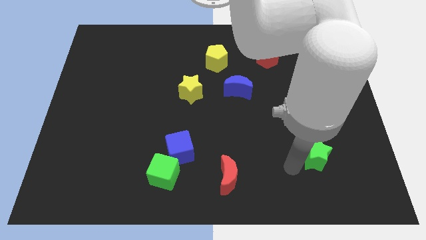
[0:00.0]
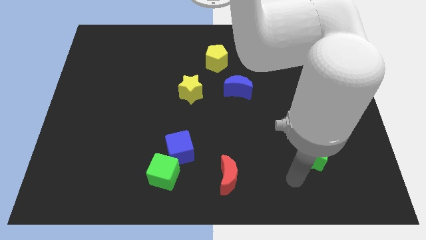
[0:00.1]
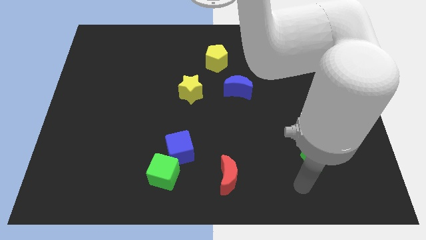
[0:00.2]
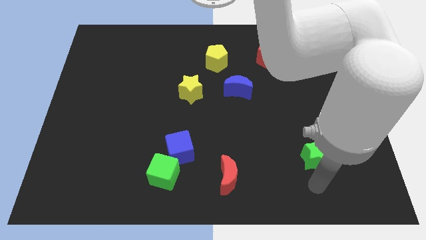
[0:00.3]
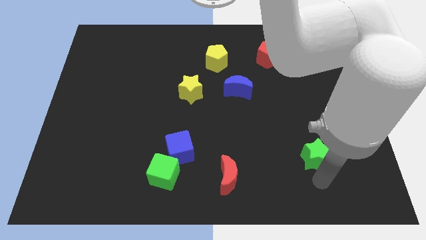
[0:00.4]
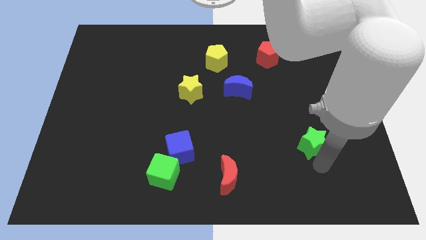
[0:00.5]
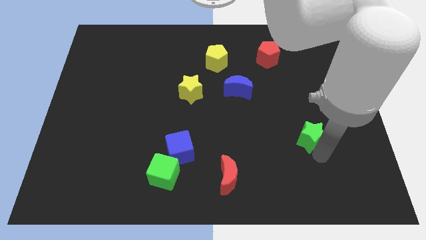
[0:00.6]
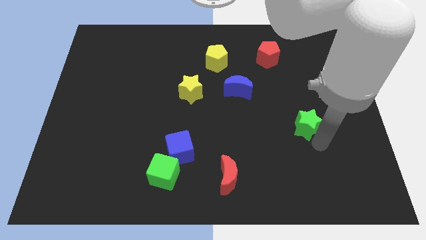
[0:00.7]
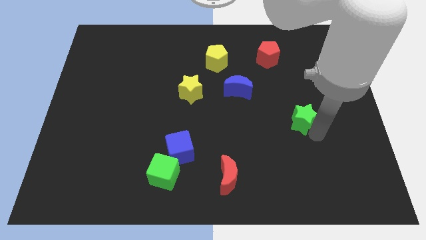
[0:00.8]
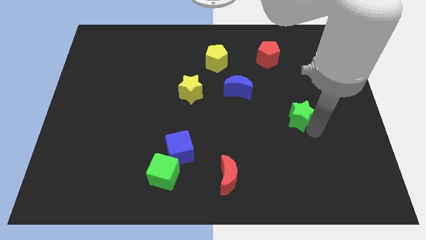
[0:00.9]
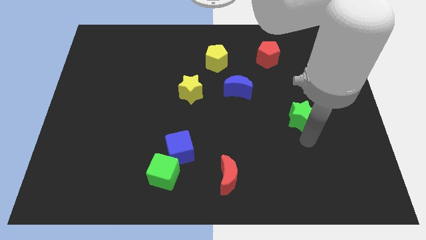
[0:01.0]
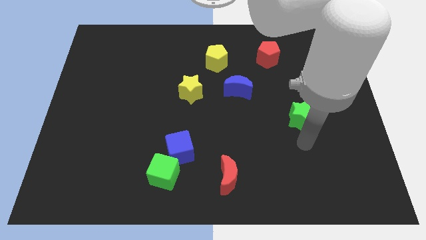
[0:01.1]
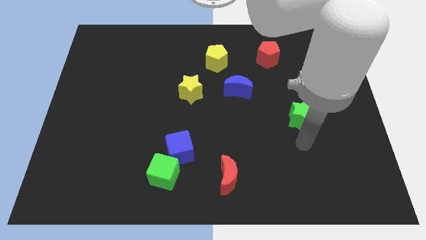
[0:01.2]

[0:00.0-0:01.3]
push the green star towards the top

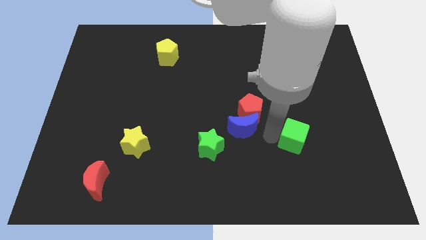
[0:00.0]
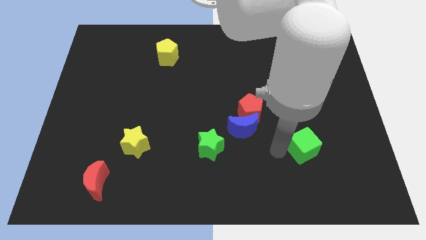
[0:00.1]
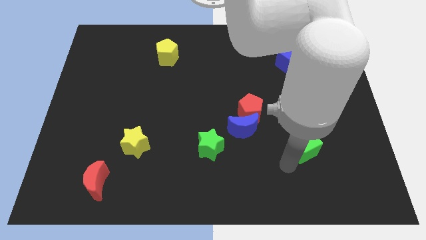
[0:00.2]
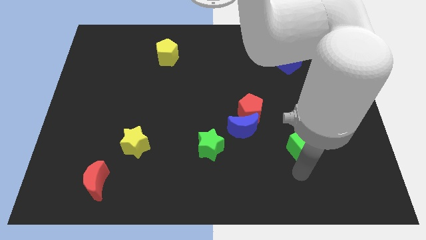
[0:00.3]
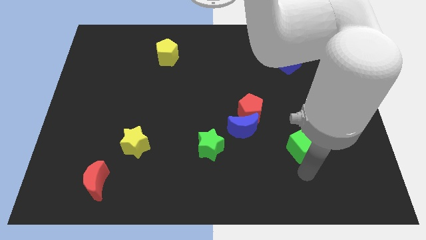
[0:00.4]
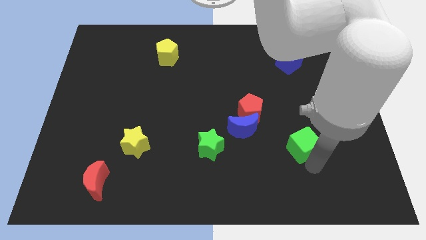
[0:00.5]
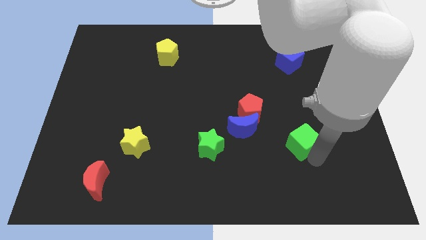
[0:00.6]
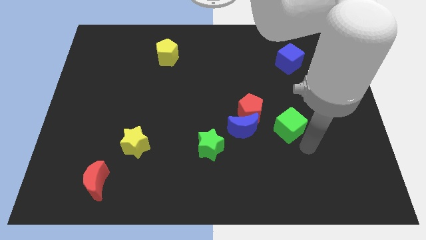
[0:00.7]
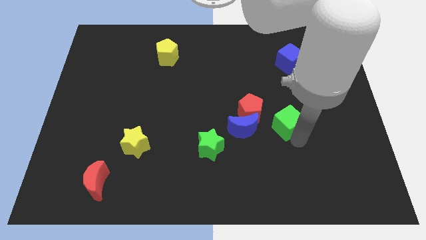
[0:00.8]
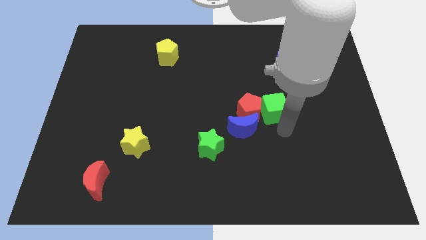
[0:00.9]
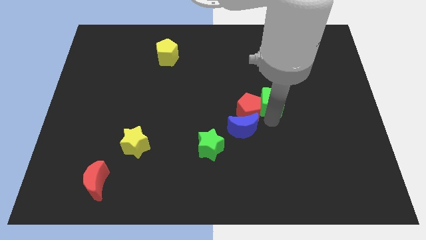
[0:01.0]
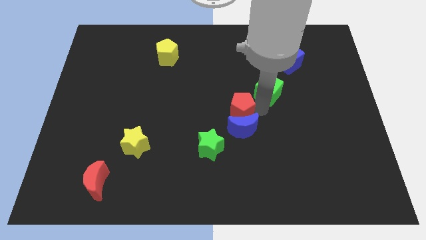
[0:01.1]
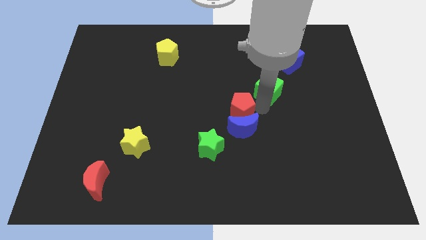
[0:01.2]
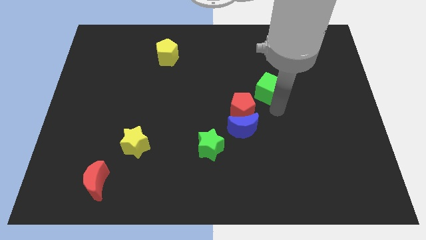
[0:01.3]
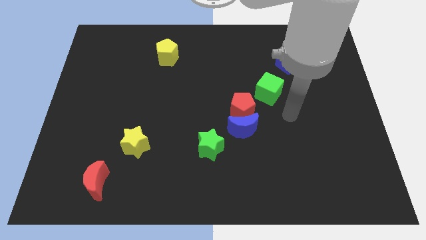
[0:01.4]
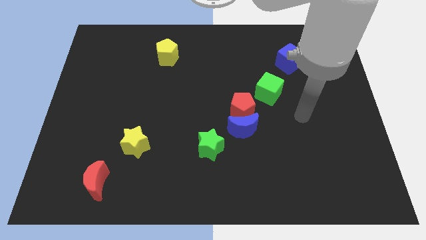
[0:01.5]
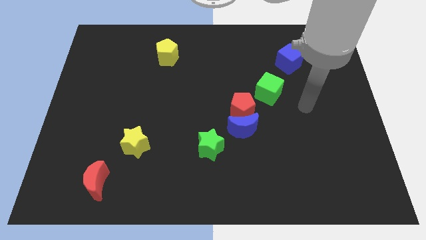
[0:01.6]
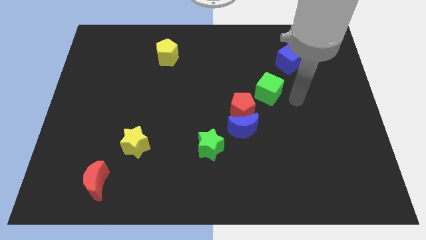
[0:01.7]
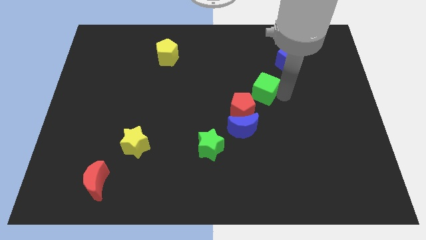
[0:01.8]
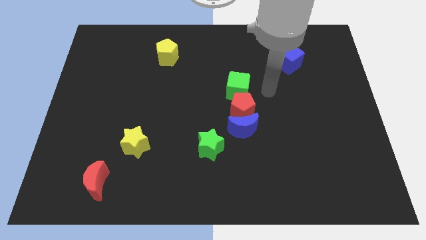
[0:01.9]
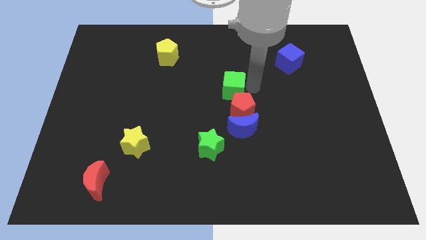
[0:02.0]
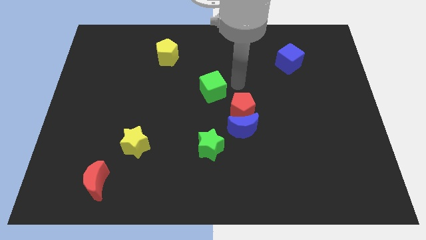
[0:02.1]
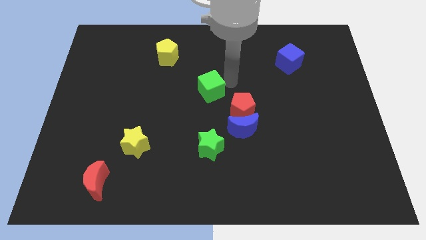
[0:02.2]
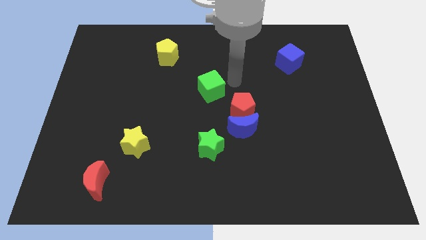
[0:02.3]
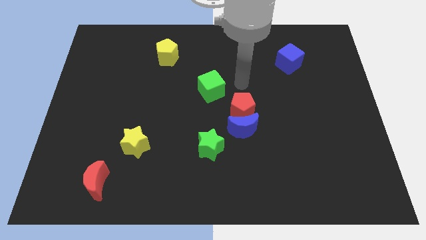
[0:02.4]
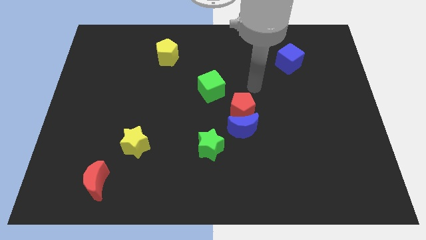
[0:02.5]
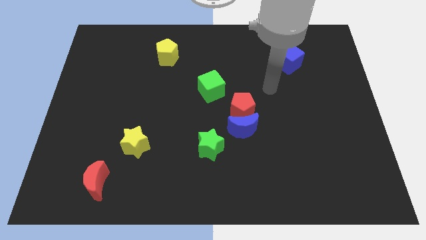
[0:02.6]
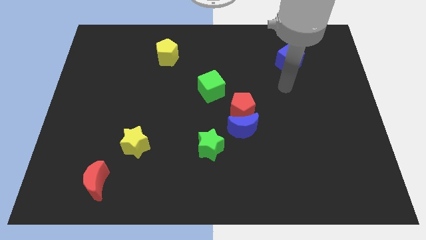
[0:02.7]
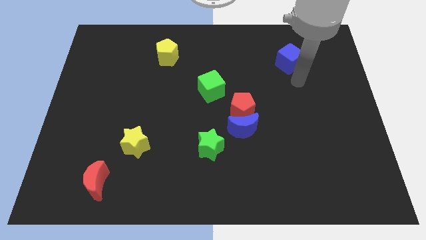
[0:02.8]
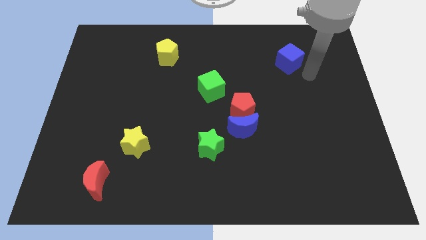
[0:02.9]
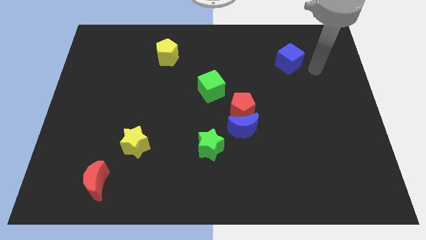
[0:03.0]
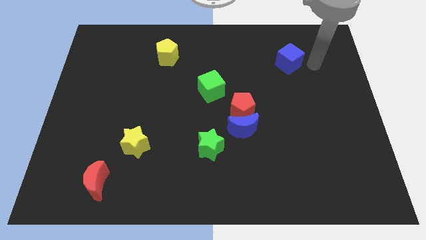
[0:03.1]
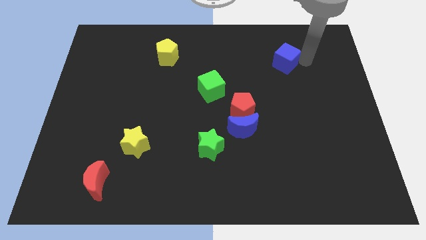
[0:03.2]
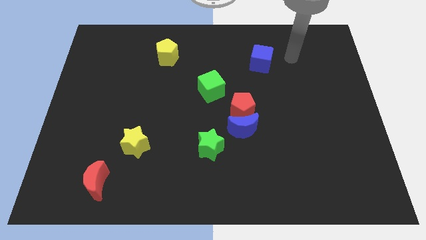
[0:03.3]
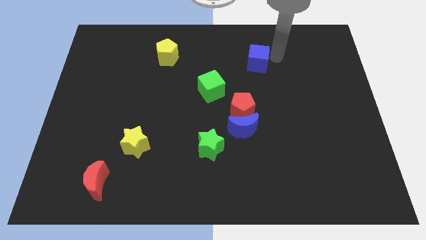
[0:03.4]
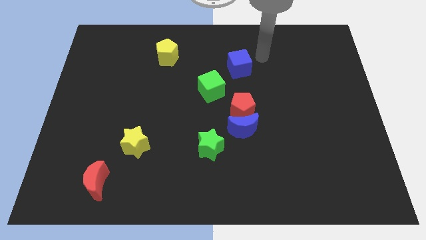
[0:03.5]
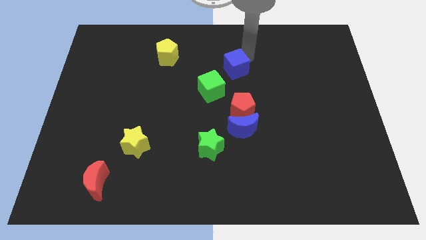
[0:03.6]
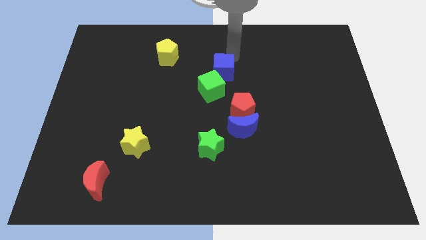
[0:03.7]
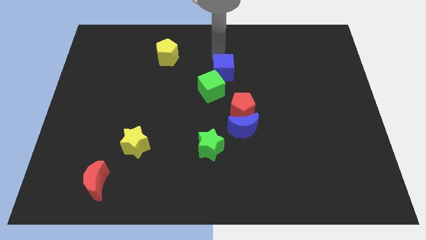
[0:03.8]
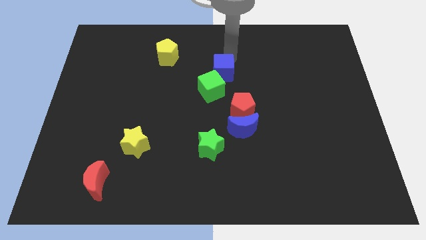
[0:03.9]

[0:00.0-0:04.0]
place blue cube above green cube

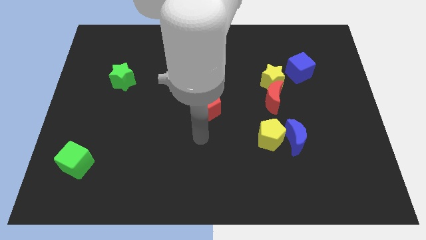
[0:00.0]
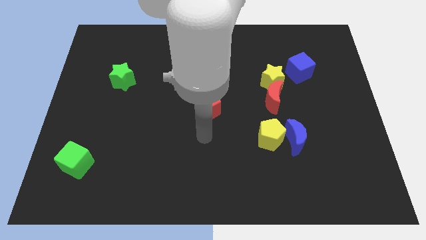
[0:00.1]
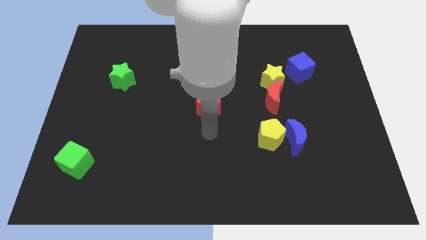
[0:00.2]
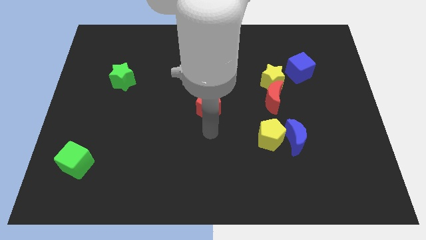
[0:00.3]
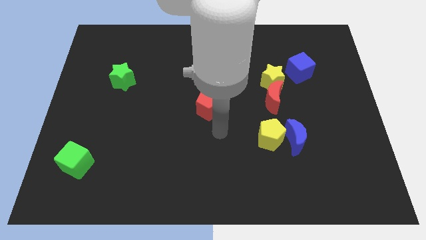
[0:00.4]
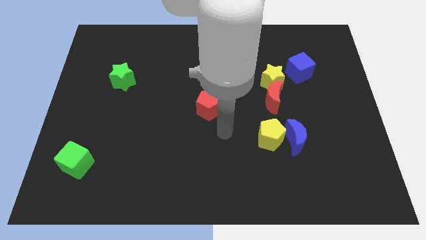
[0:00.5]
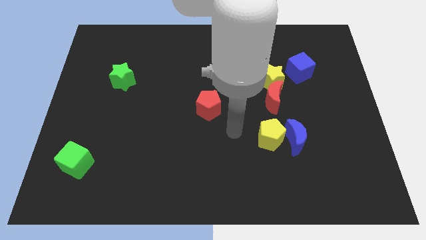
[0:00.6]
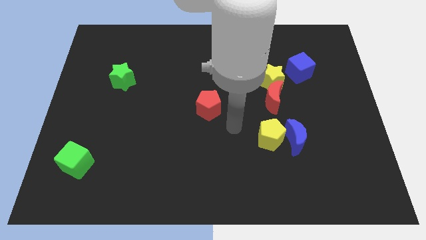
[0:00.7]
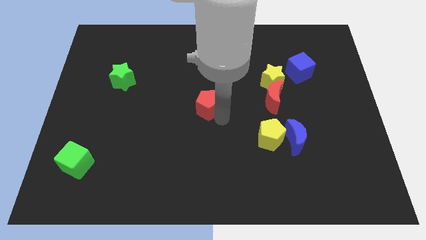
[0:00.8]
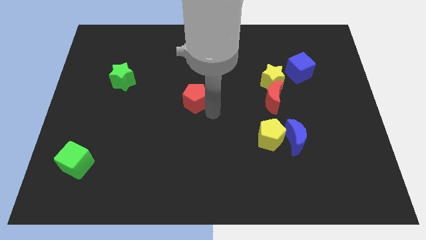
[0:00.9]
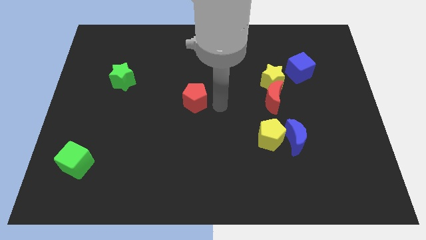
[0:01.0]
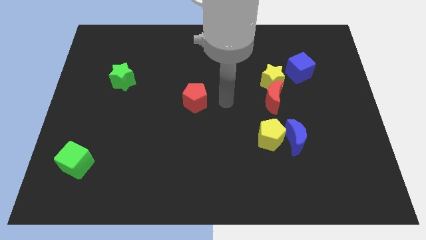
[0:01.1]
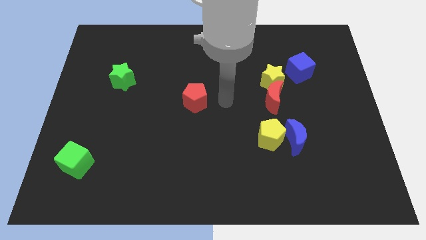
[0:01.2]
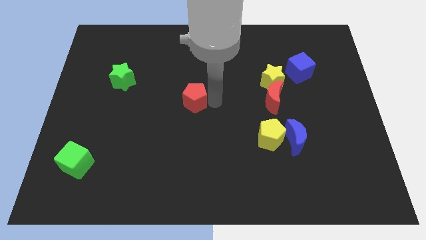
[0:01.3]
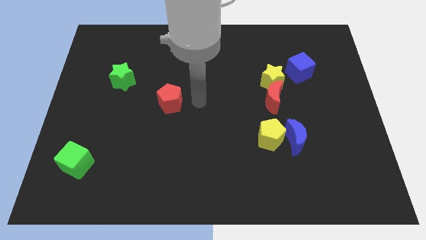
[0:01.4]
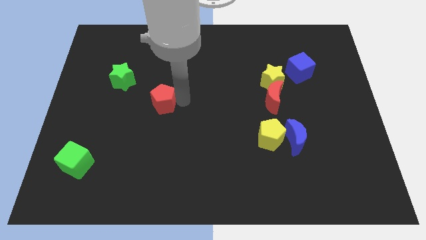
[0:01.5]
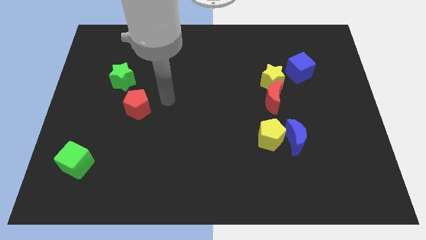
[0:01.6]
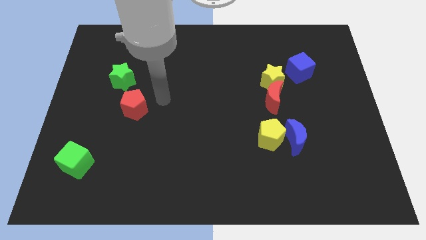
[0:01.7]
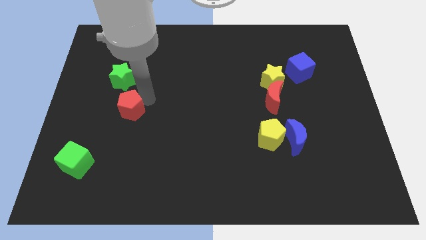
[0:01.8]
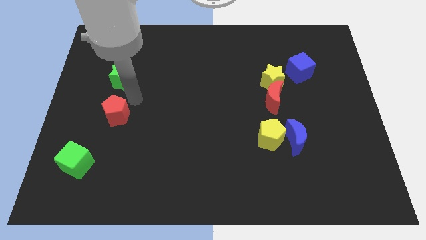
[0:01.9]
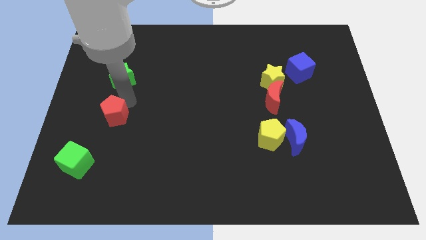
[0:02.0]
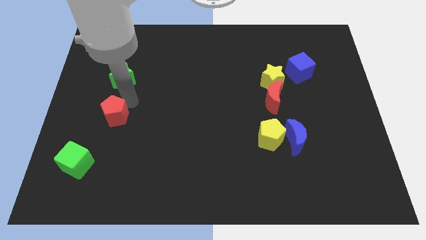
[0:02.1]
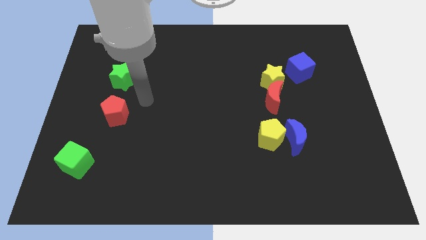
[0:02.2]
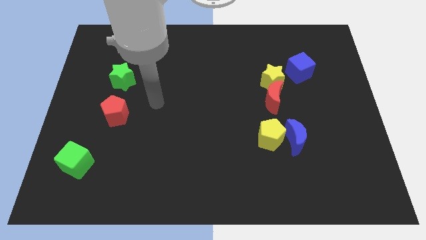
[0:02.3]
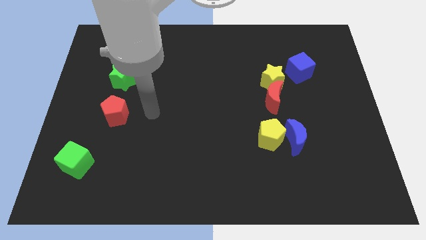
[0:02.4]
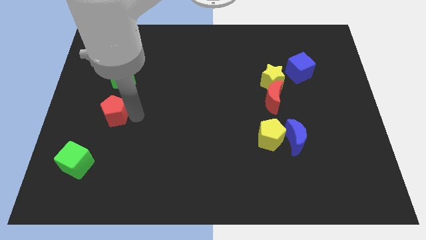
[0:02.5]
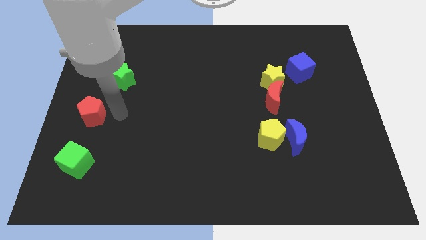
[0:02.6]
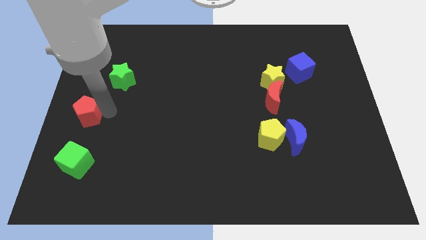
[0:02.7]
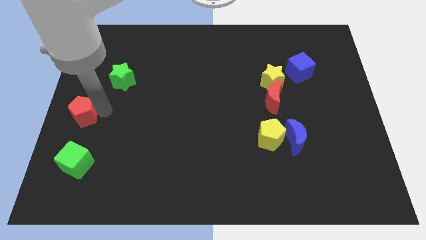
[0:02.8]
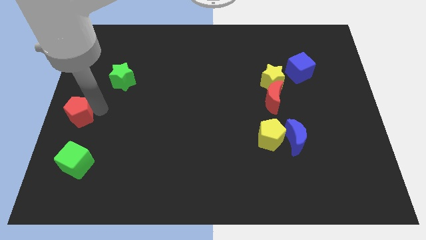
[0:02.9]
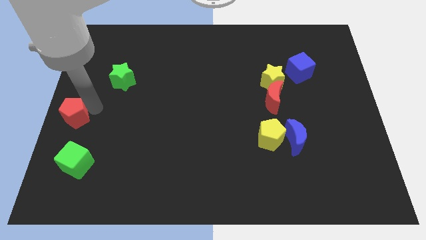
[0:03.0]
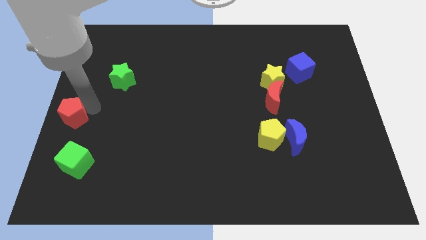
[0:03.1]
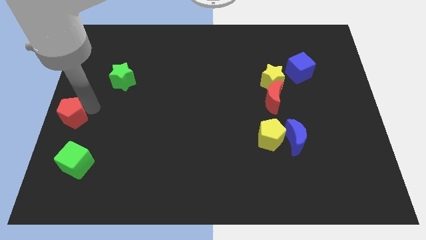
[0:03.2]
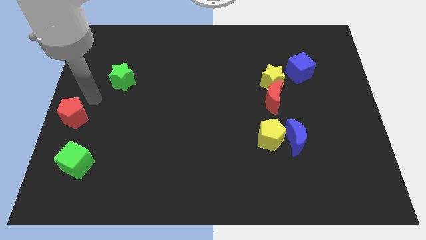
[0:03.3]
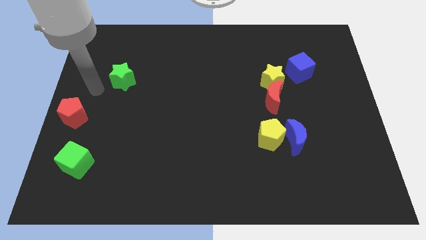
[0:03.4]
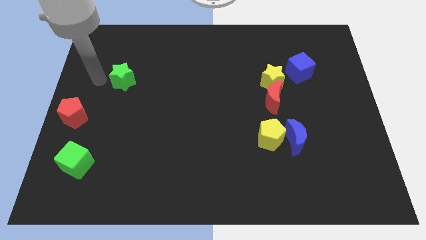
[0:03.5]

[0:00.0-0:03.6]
place the red pentagon above the green cube
